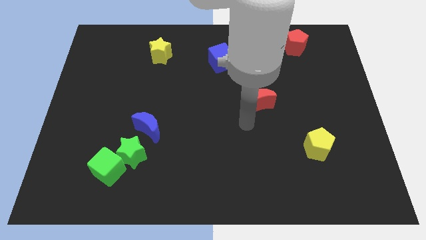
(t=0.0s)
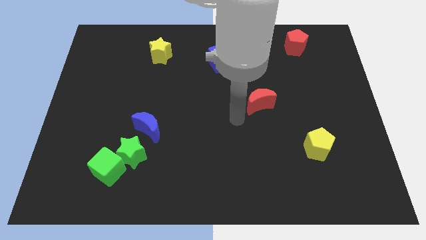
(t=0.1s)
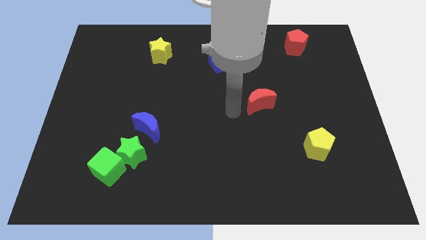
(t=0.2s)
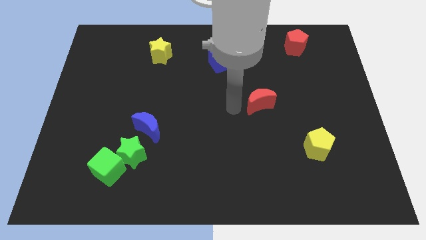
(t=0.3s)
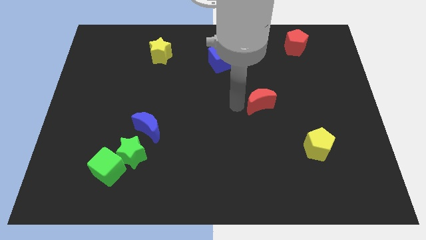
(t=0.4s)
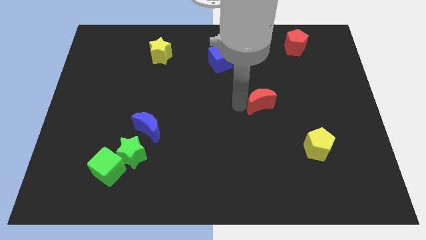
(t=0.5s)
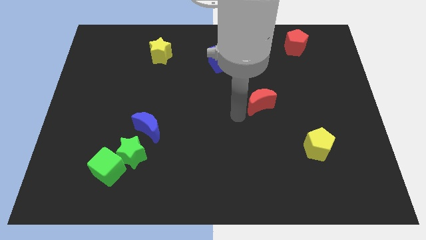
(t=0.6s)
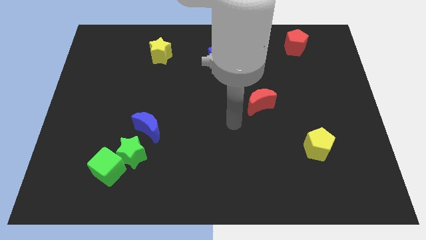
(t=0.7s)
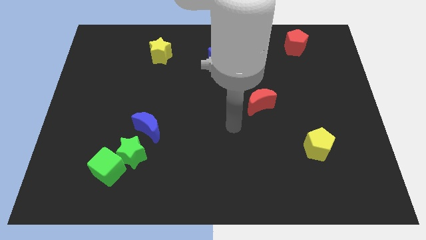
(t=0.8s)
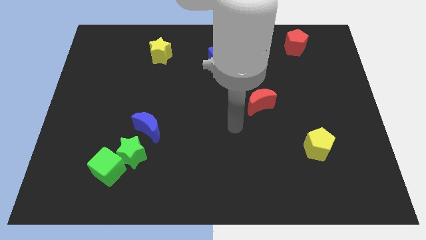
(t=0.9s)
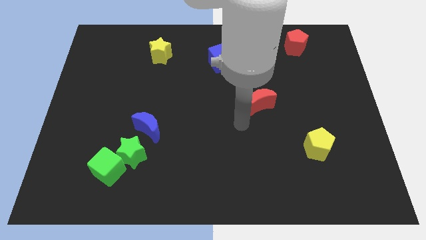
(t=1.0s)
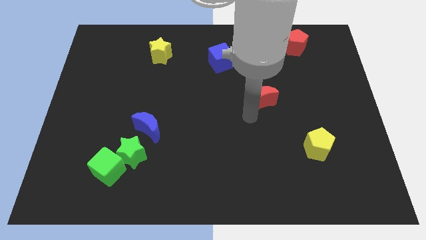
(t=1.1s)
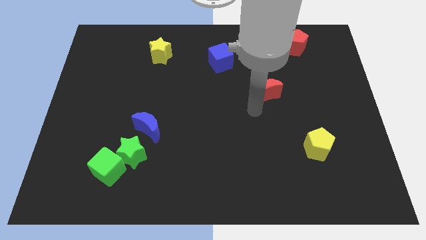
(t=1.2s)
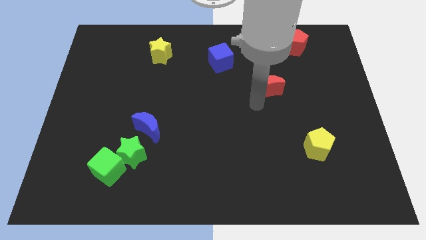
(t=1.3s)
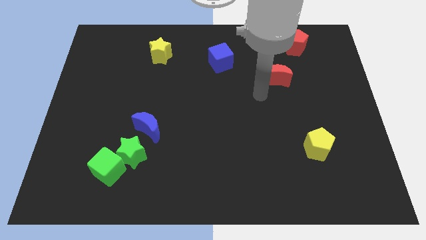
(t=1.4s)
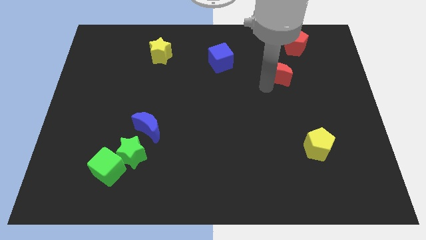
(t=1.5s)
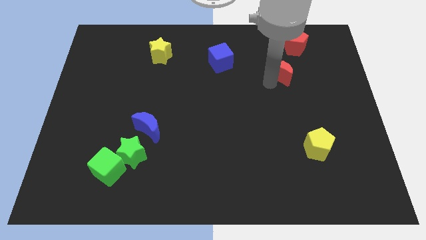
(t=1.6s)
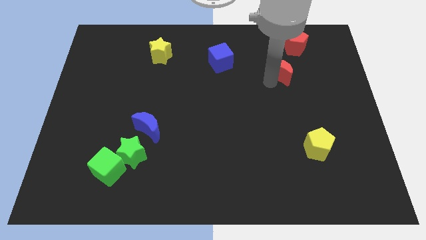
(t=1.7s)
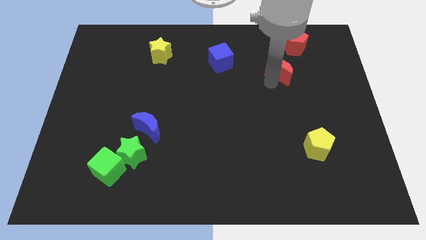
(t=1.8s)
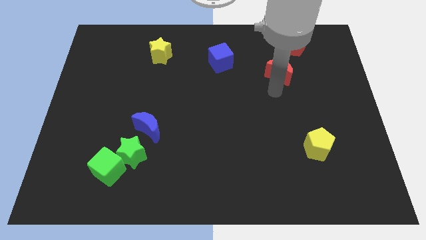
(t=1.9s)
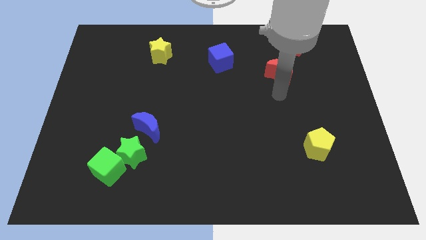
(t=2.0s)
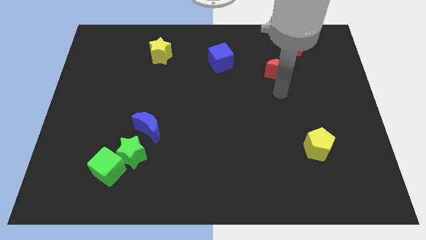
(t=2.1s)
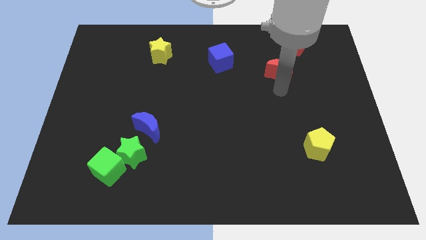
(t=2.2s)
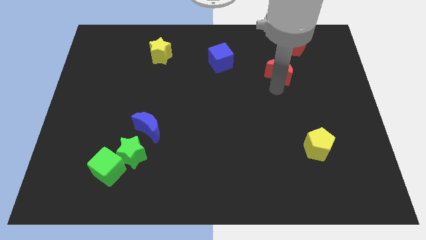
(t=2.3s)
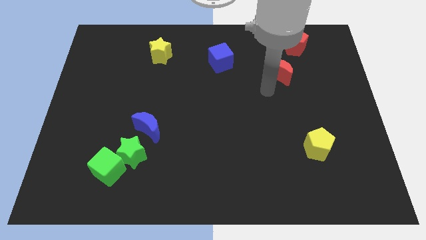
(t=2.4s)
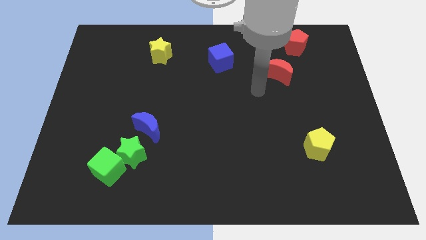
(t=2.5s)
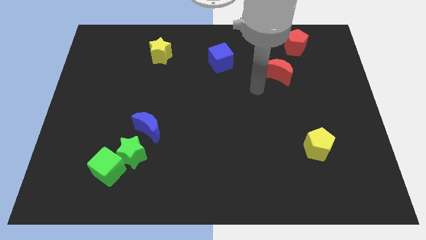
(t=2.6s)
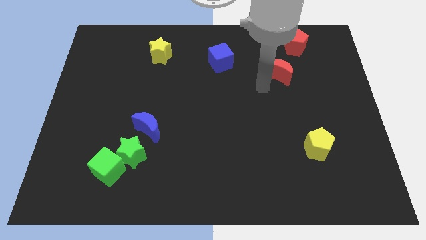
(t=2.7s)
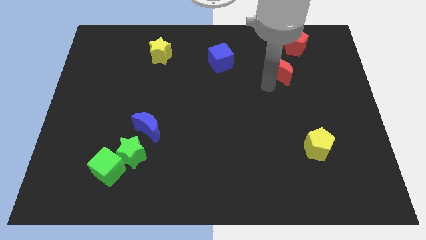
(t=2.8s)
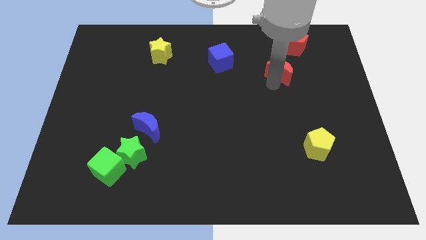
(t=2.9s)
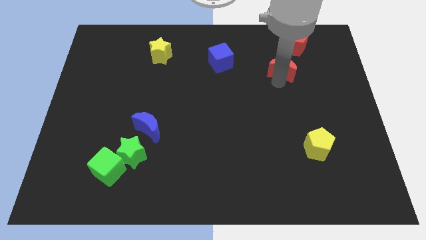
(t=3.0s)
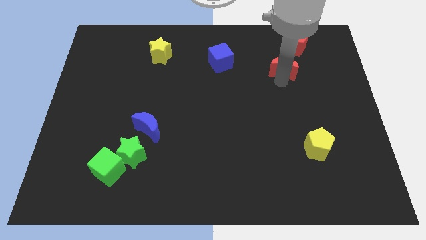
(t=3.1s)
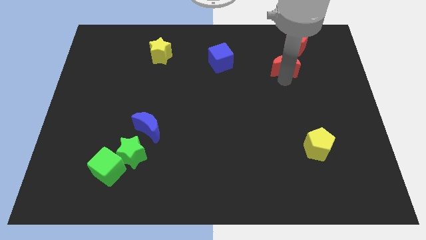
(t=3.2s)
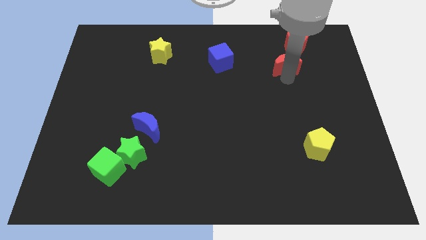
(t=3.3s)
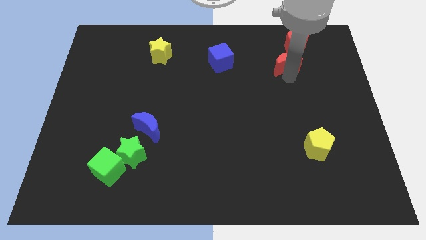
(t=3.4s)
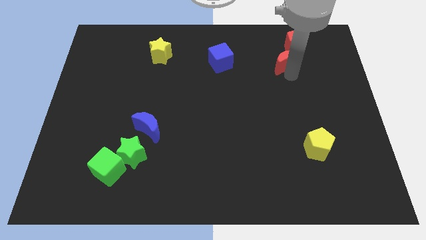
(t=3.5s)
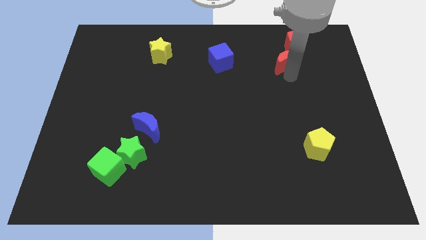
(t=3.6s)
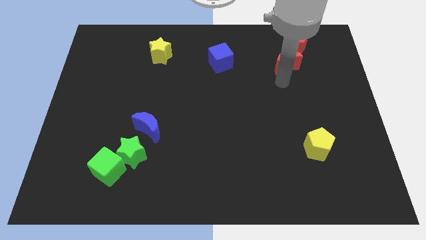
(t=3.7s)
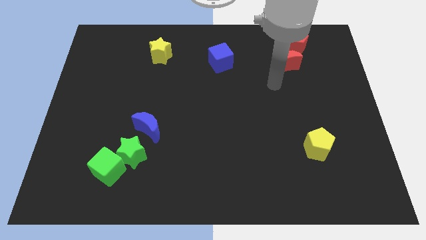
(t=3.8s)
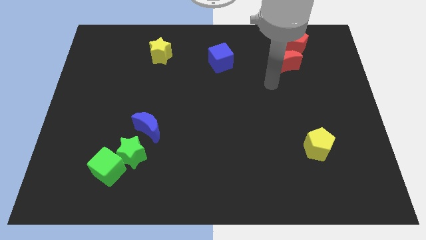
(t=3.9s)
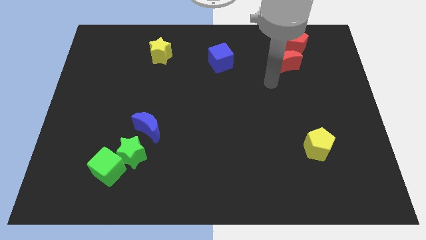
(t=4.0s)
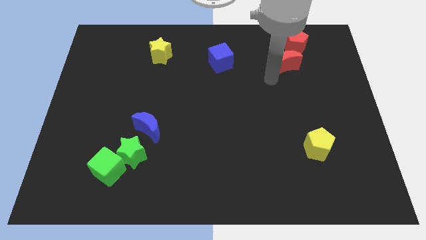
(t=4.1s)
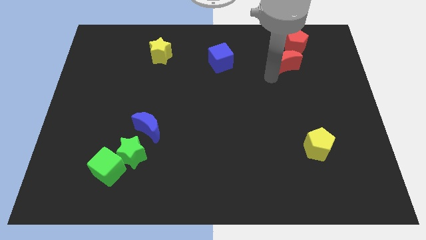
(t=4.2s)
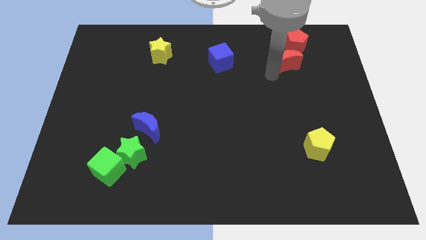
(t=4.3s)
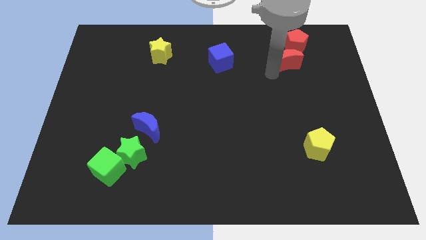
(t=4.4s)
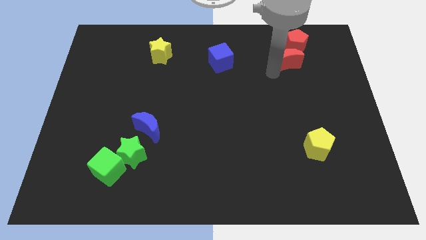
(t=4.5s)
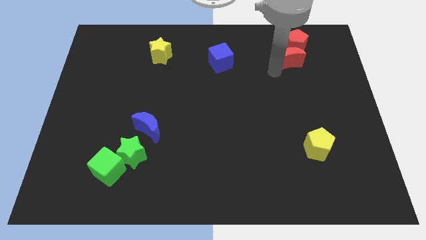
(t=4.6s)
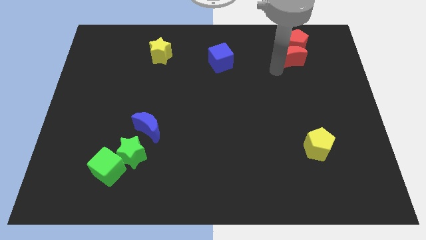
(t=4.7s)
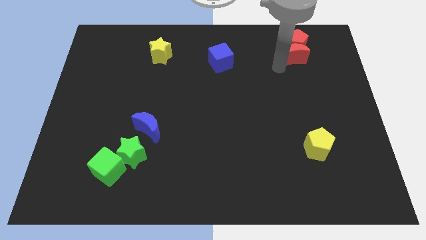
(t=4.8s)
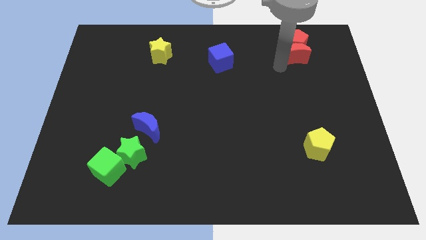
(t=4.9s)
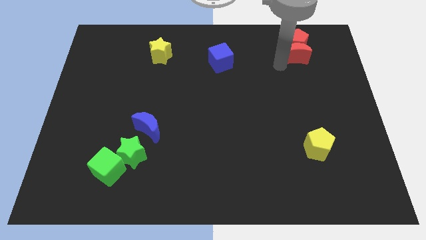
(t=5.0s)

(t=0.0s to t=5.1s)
push the red moon into the bottom side of the red pentagon

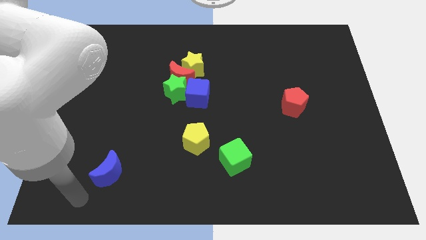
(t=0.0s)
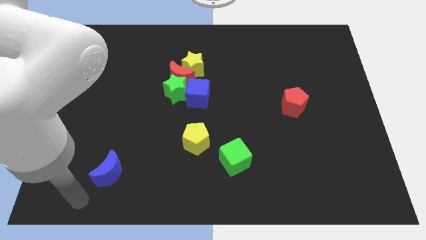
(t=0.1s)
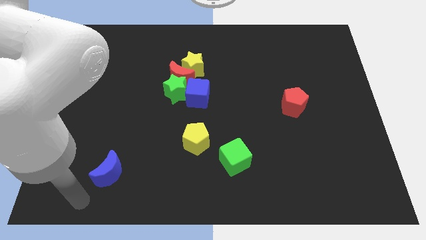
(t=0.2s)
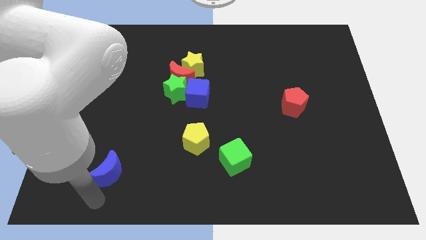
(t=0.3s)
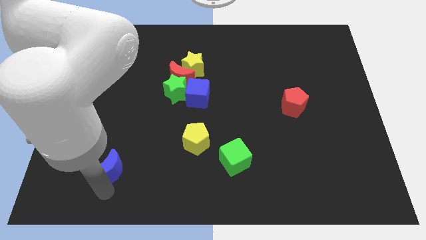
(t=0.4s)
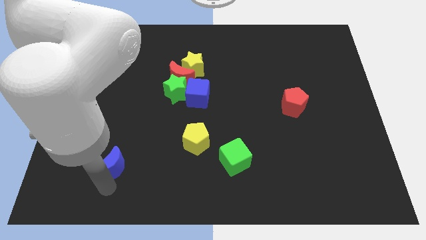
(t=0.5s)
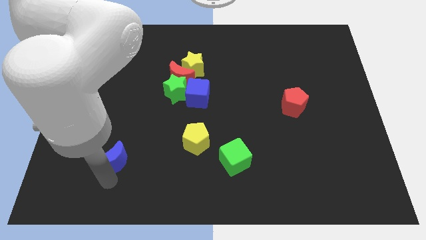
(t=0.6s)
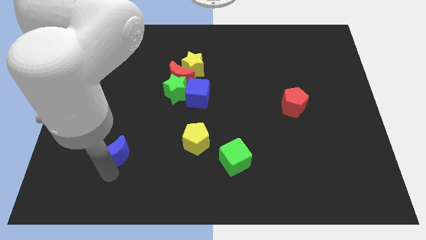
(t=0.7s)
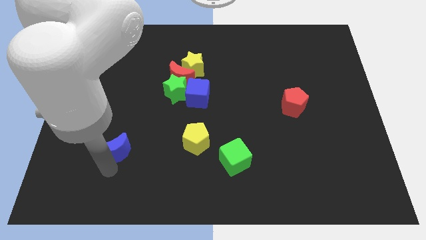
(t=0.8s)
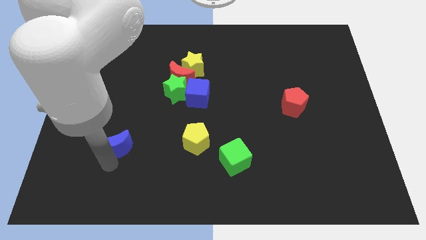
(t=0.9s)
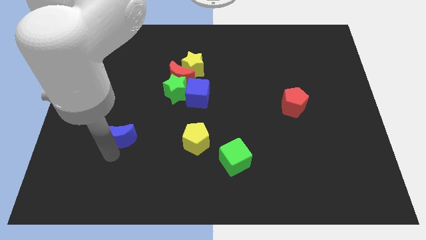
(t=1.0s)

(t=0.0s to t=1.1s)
place the blue moon parallel to the yellow pentagon

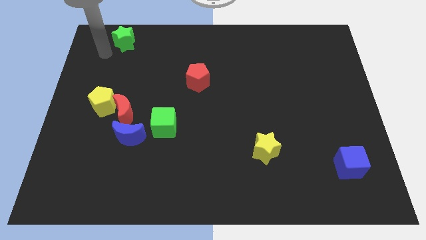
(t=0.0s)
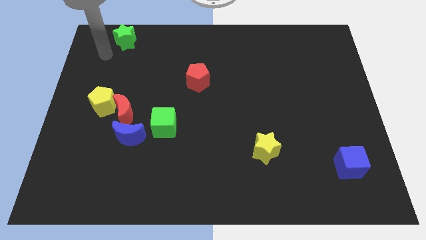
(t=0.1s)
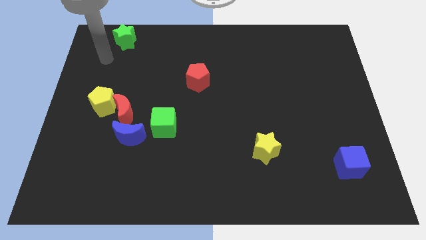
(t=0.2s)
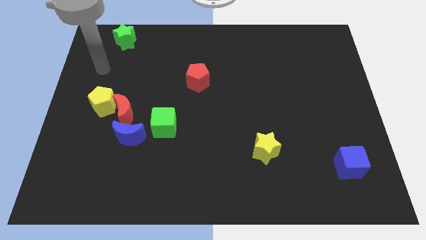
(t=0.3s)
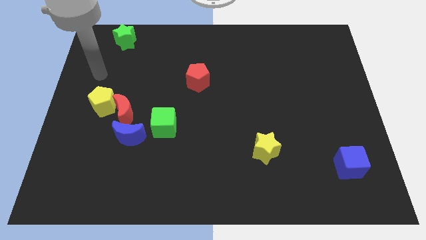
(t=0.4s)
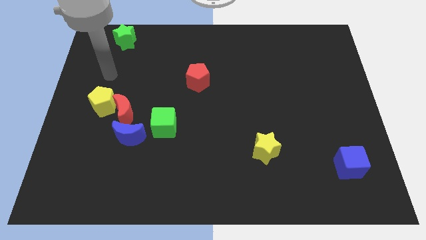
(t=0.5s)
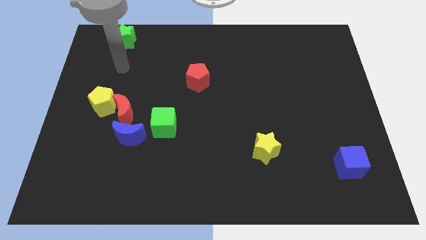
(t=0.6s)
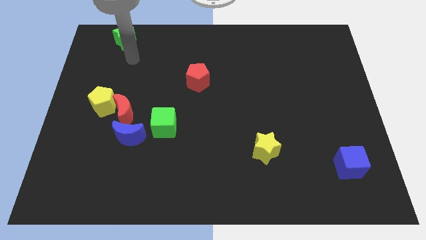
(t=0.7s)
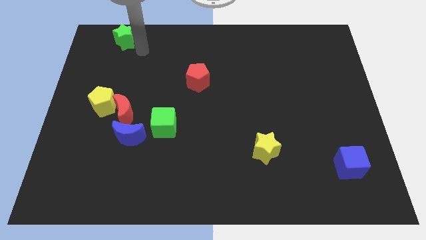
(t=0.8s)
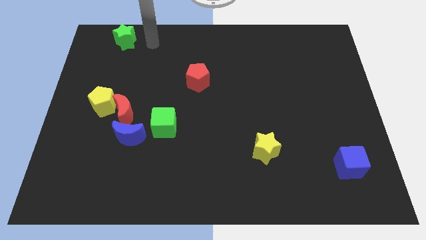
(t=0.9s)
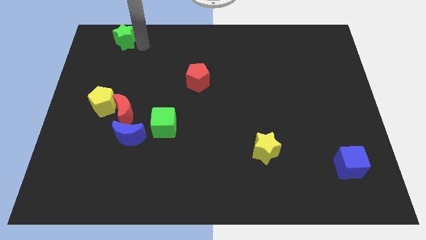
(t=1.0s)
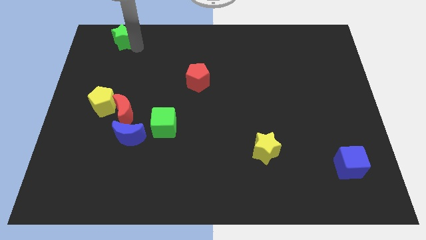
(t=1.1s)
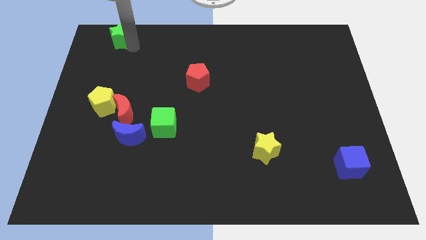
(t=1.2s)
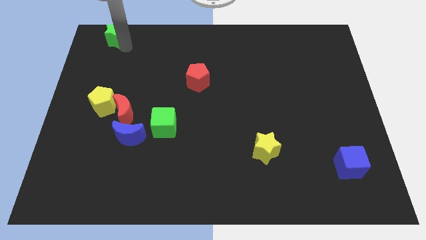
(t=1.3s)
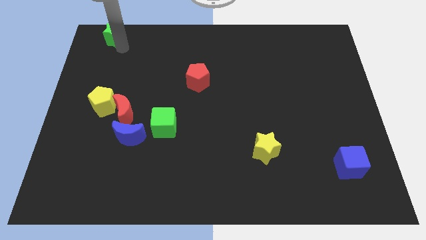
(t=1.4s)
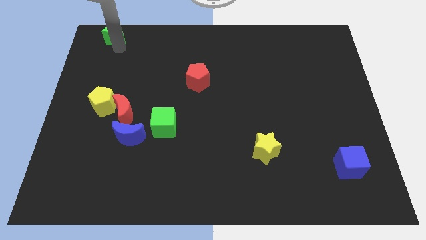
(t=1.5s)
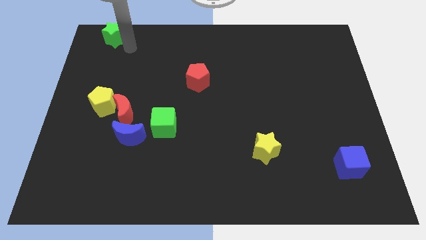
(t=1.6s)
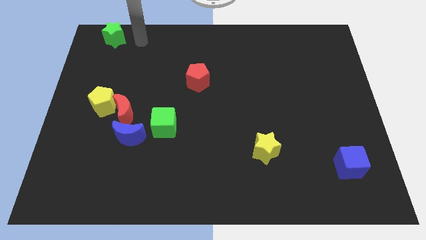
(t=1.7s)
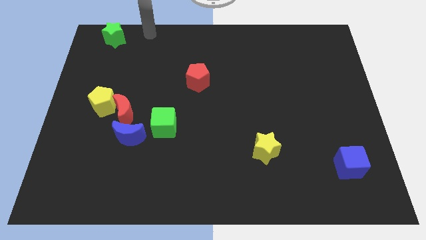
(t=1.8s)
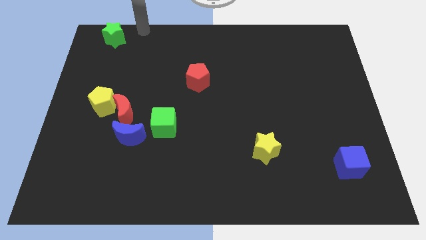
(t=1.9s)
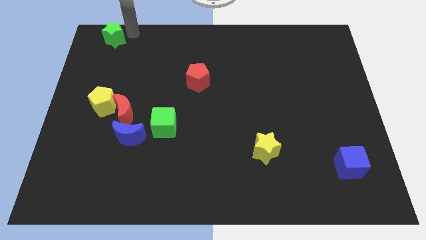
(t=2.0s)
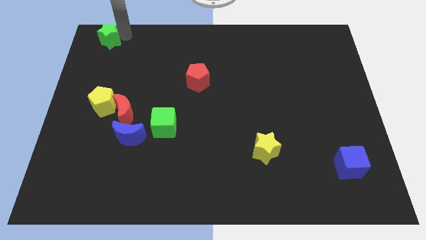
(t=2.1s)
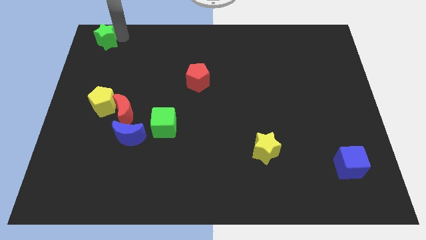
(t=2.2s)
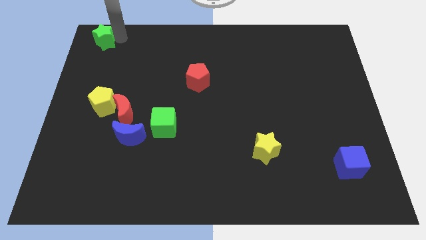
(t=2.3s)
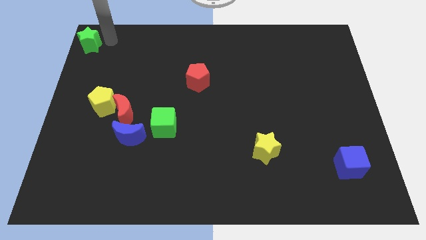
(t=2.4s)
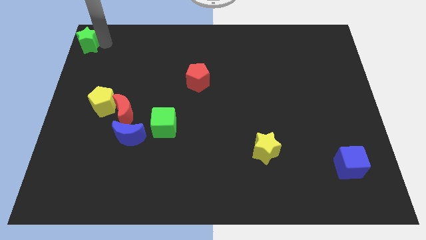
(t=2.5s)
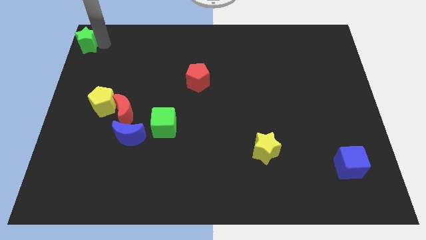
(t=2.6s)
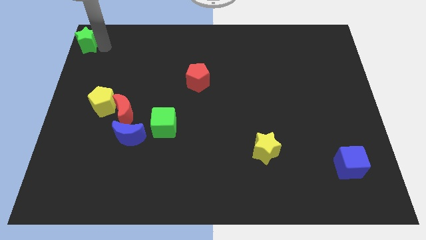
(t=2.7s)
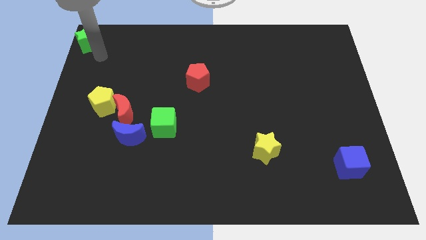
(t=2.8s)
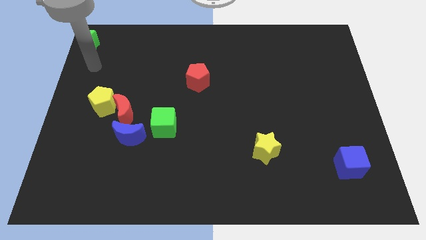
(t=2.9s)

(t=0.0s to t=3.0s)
slide green star to top left corner
